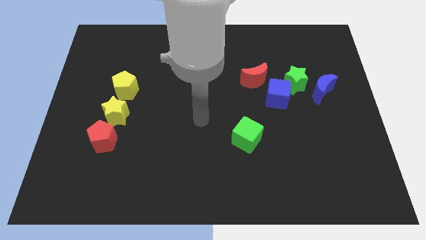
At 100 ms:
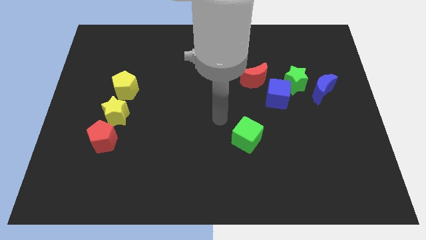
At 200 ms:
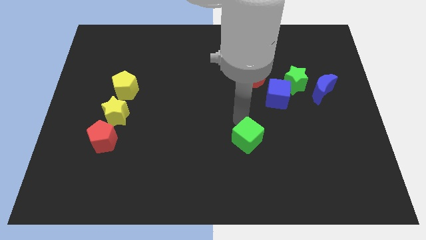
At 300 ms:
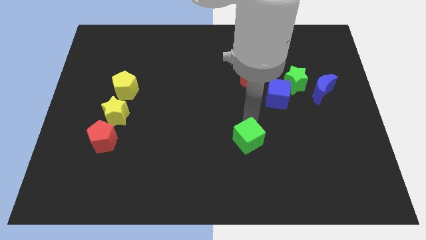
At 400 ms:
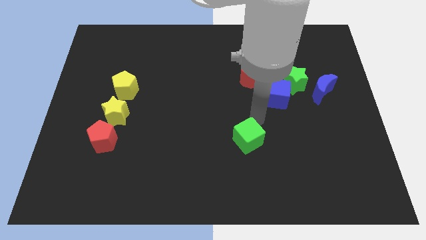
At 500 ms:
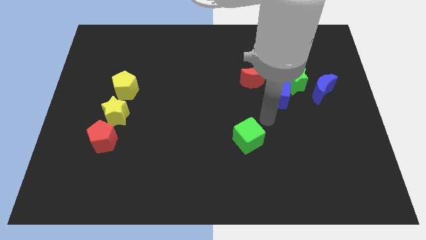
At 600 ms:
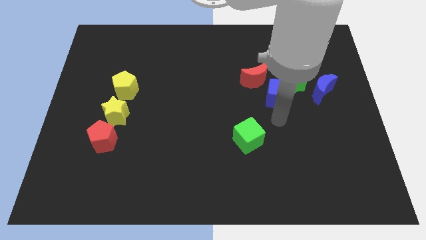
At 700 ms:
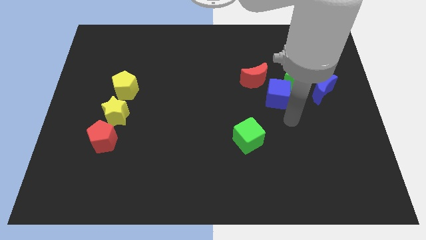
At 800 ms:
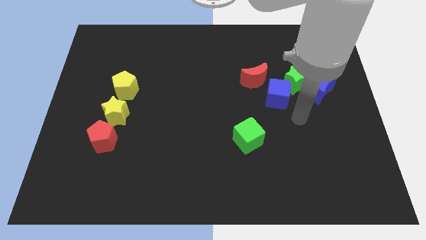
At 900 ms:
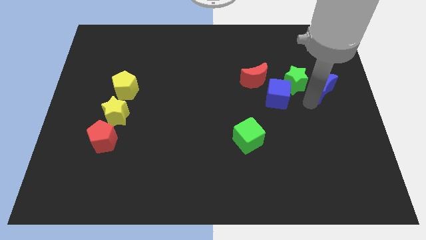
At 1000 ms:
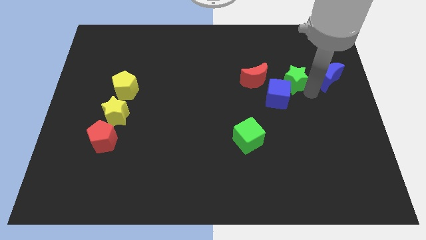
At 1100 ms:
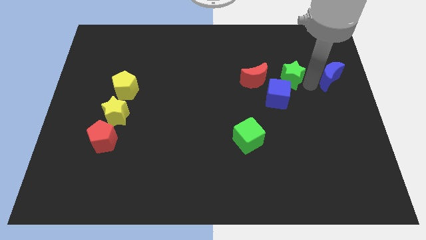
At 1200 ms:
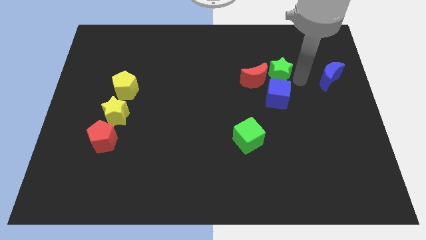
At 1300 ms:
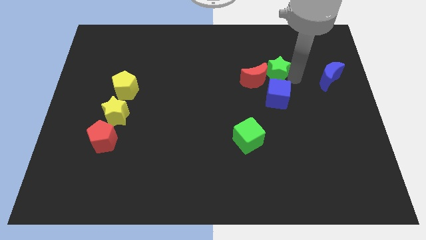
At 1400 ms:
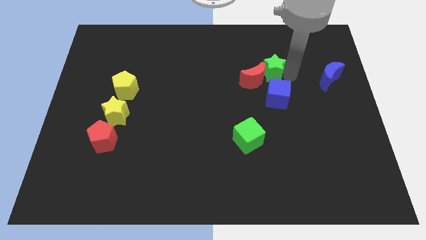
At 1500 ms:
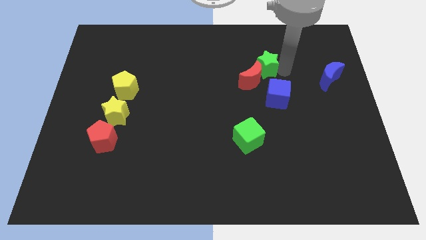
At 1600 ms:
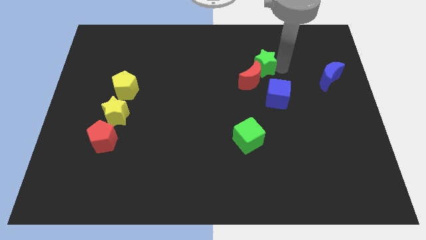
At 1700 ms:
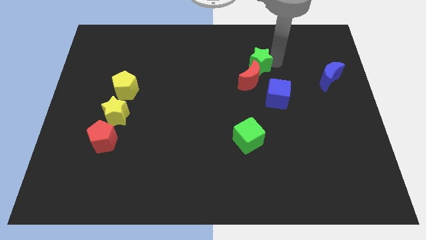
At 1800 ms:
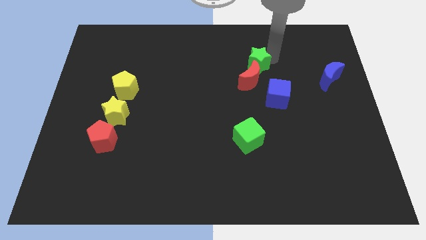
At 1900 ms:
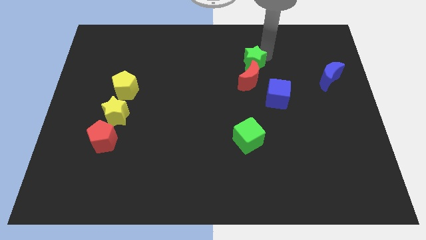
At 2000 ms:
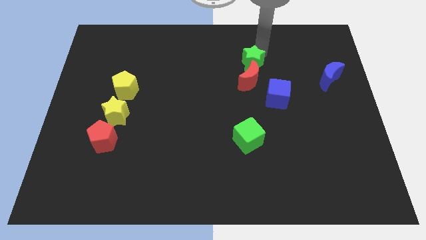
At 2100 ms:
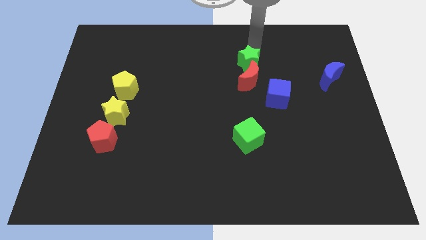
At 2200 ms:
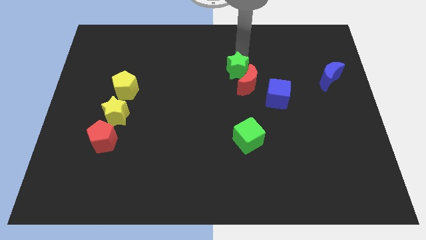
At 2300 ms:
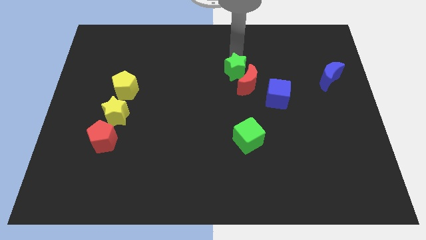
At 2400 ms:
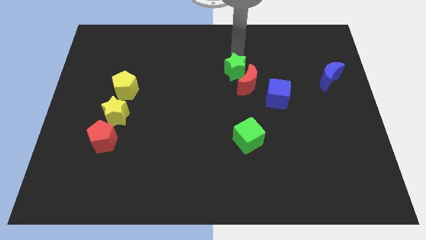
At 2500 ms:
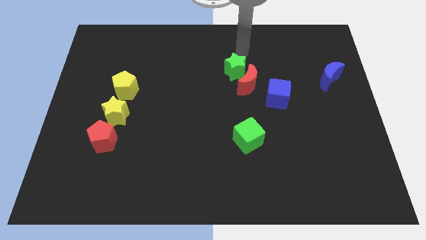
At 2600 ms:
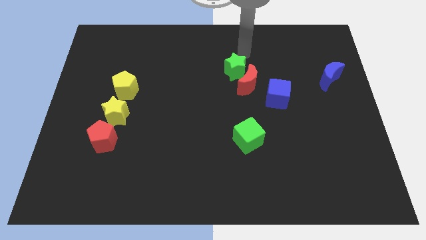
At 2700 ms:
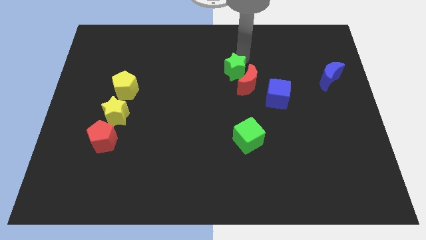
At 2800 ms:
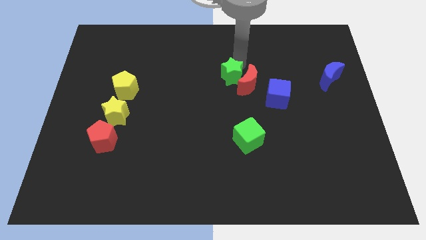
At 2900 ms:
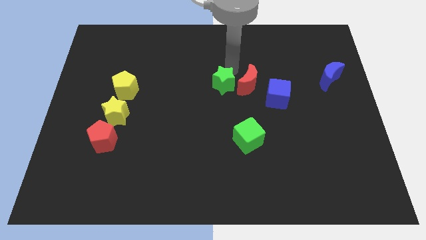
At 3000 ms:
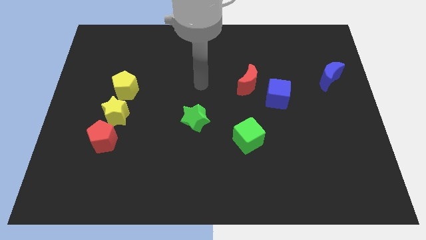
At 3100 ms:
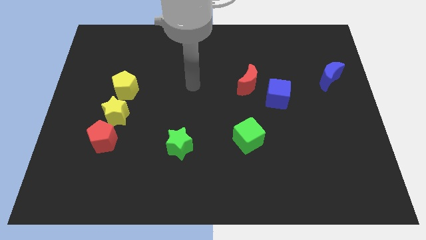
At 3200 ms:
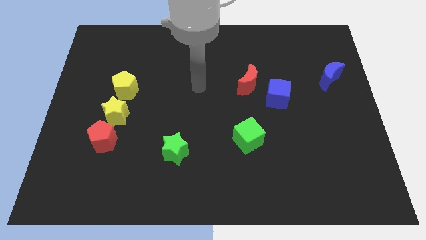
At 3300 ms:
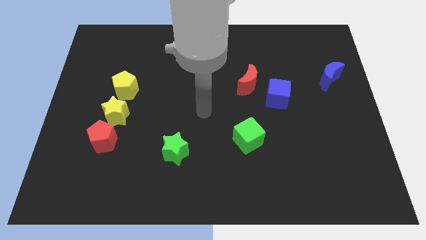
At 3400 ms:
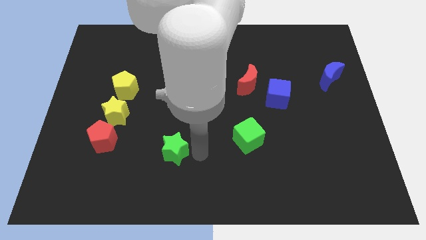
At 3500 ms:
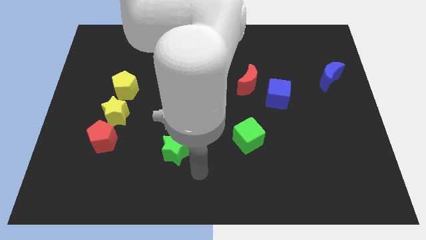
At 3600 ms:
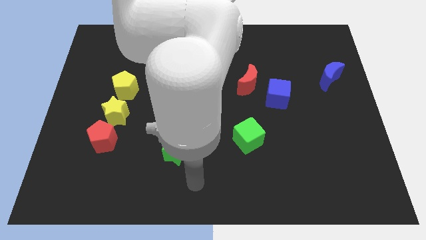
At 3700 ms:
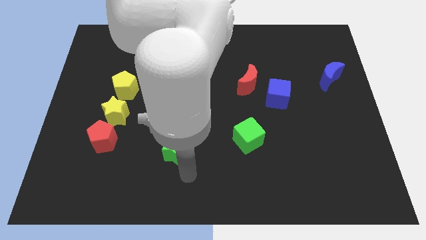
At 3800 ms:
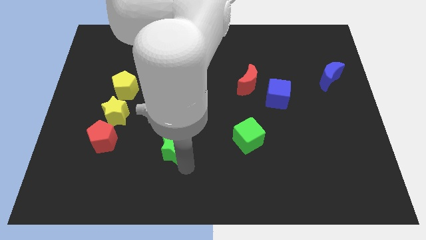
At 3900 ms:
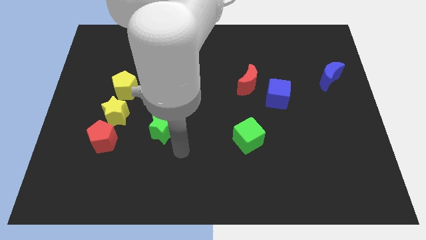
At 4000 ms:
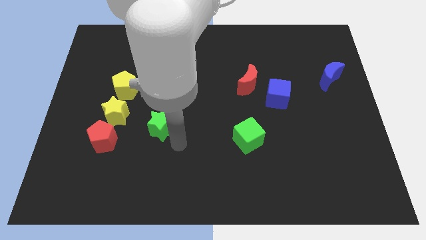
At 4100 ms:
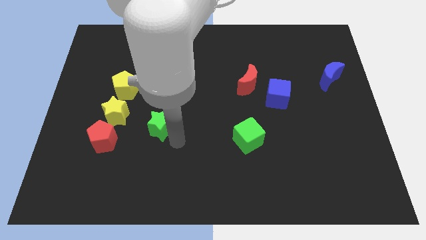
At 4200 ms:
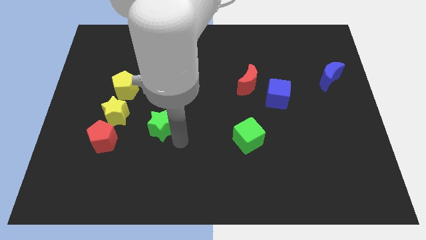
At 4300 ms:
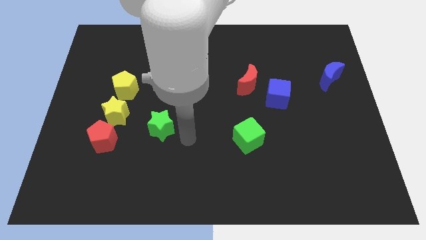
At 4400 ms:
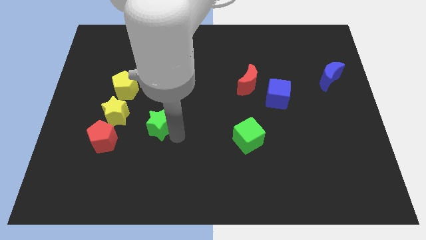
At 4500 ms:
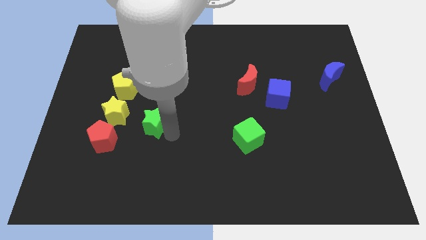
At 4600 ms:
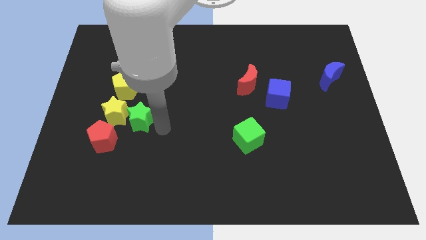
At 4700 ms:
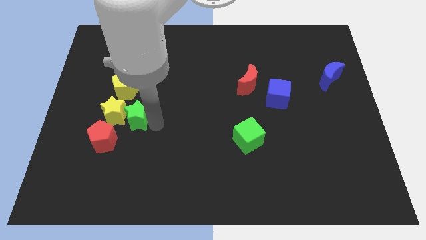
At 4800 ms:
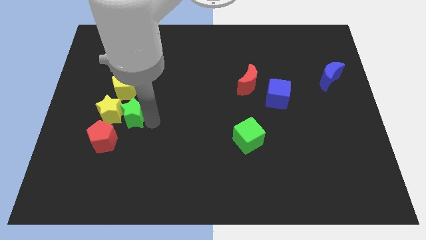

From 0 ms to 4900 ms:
put the green star towards the yellow star

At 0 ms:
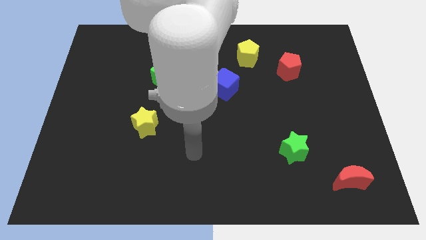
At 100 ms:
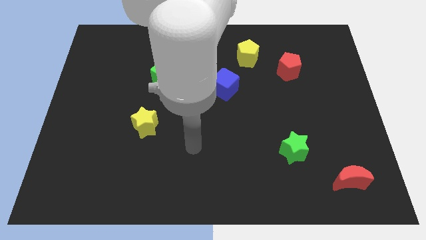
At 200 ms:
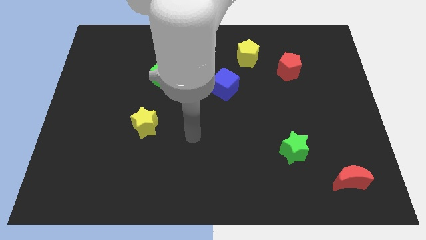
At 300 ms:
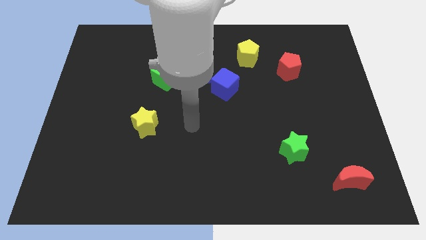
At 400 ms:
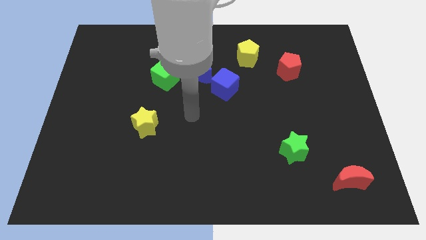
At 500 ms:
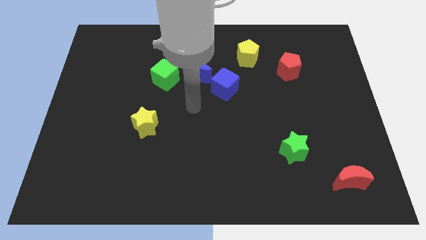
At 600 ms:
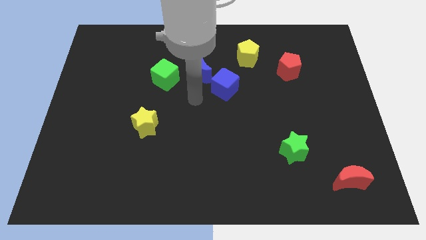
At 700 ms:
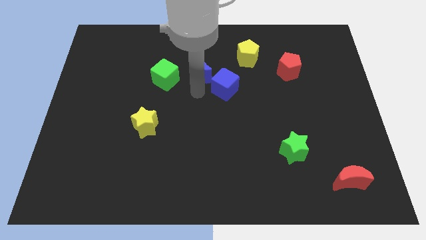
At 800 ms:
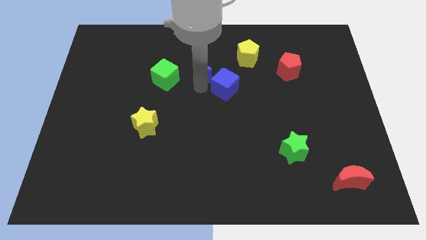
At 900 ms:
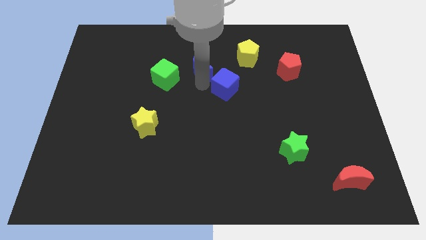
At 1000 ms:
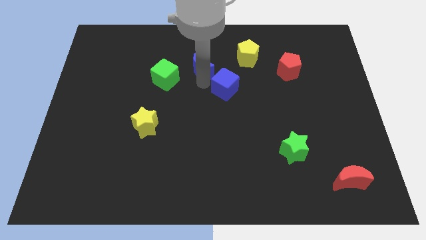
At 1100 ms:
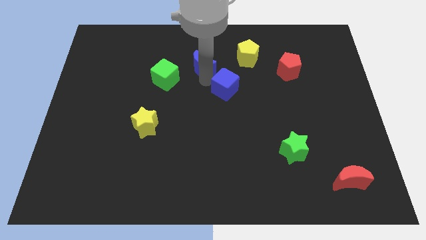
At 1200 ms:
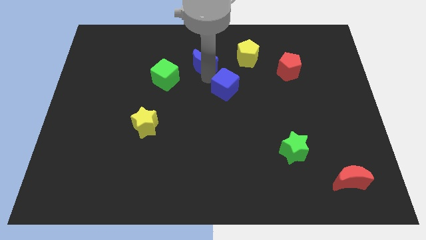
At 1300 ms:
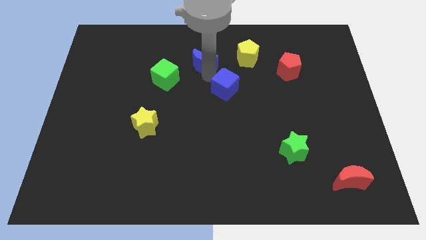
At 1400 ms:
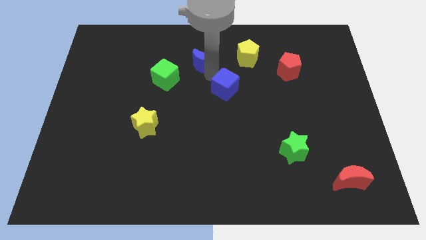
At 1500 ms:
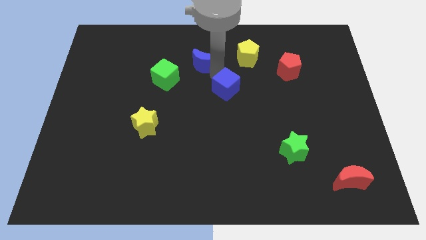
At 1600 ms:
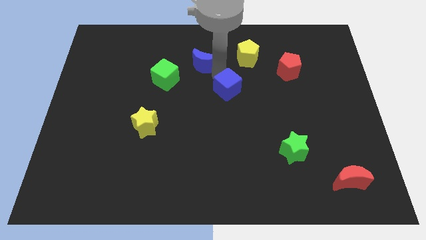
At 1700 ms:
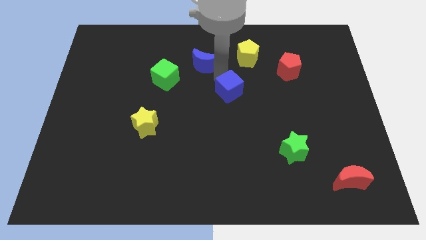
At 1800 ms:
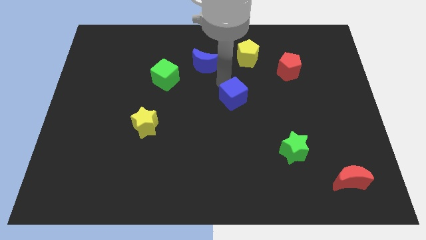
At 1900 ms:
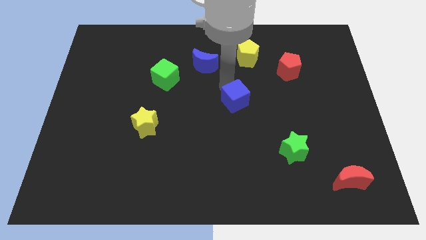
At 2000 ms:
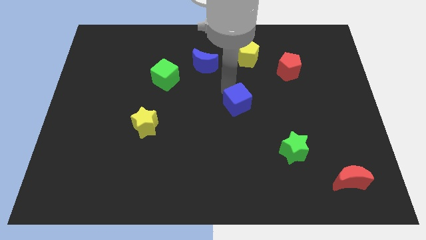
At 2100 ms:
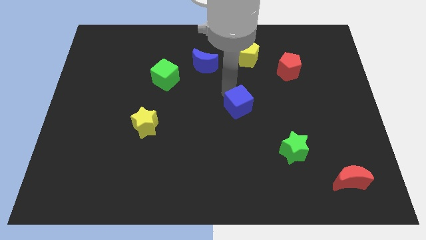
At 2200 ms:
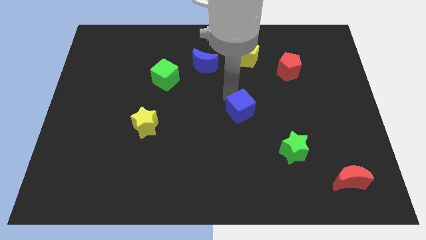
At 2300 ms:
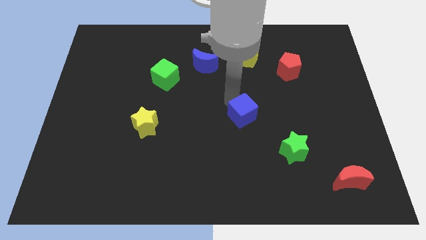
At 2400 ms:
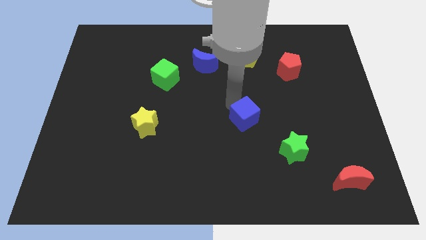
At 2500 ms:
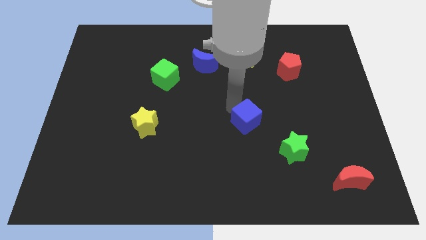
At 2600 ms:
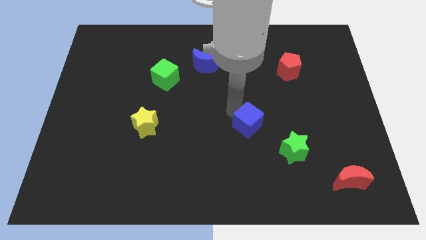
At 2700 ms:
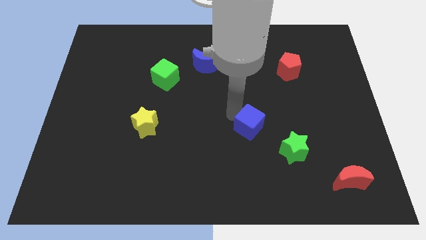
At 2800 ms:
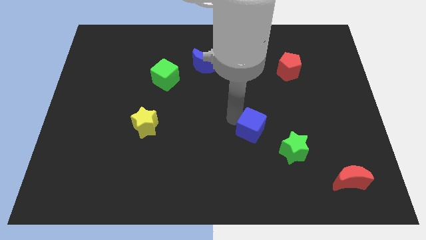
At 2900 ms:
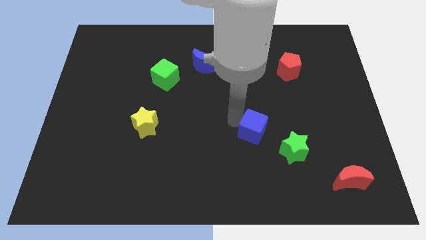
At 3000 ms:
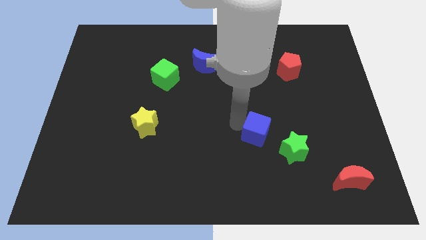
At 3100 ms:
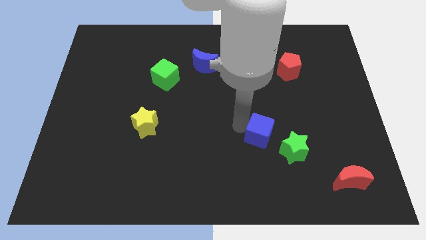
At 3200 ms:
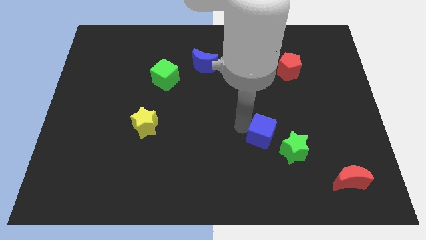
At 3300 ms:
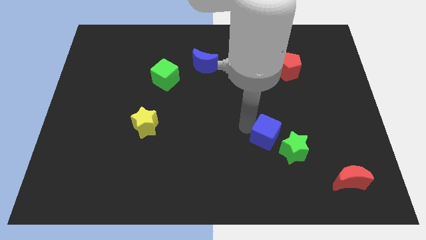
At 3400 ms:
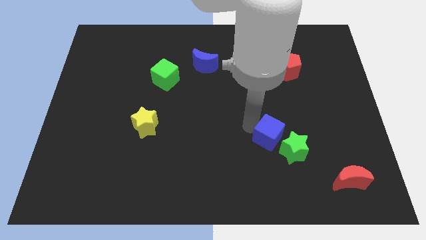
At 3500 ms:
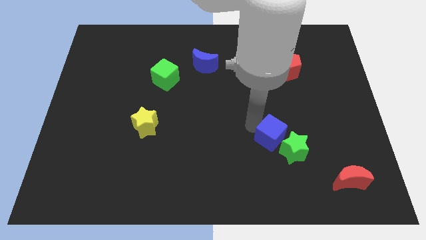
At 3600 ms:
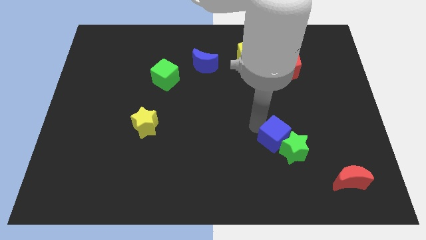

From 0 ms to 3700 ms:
put the blue cube next to the green star
